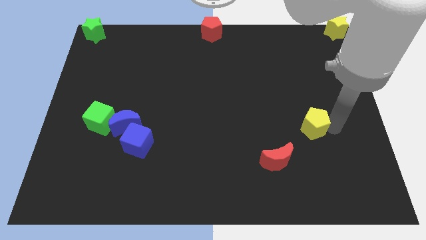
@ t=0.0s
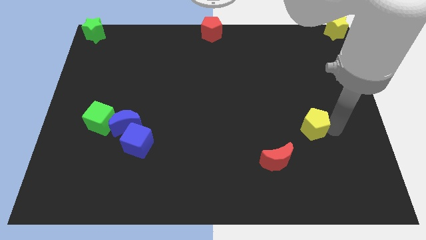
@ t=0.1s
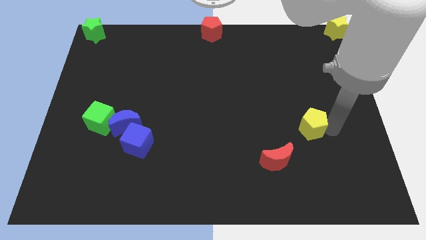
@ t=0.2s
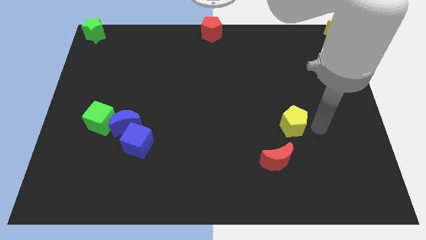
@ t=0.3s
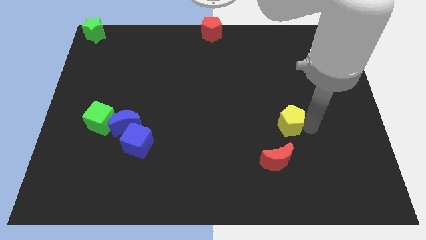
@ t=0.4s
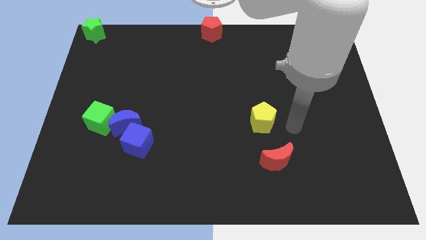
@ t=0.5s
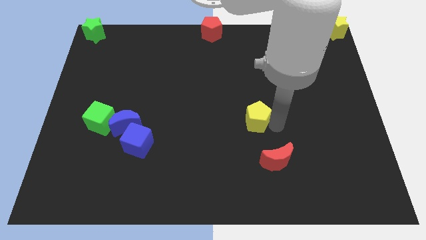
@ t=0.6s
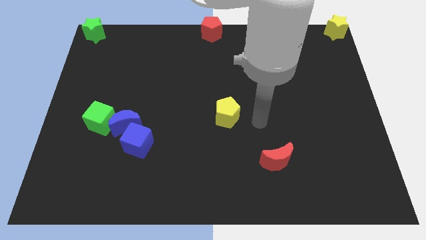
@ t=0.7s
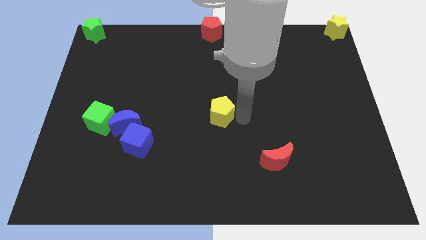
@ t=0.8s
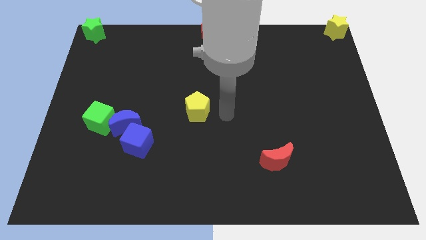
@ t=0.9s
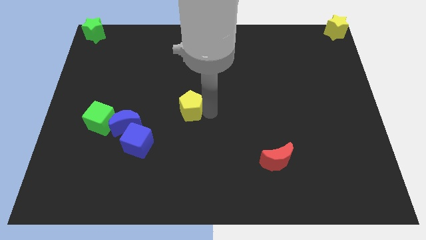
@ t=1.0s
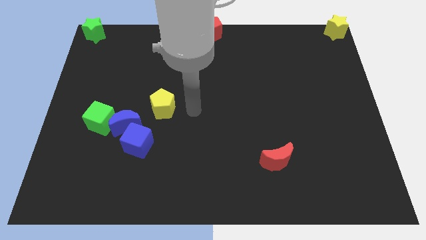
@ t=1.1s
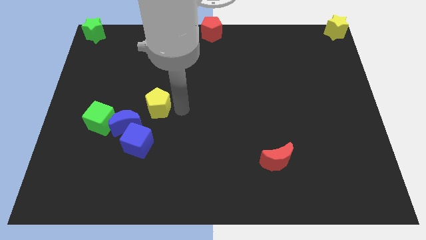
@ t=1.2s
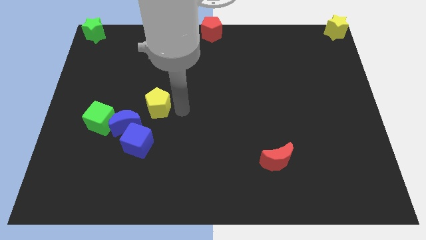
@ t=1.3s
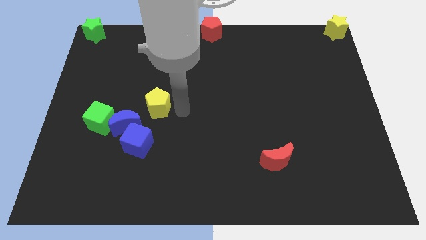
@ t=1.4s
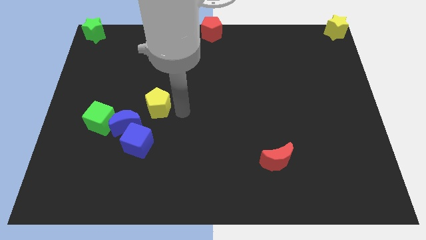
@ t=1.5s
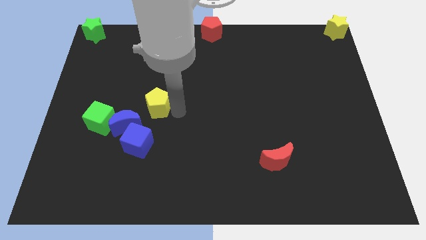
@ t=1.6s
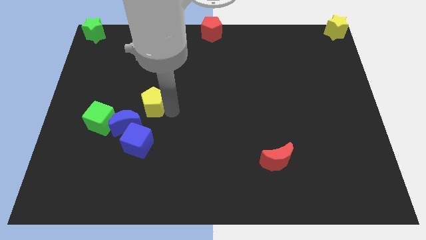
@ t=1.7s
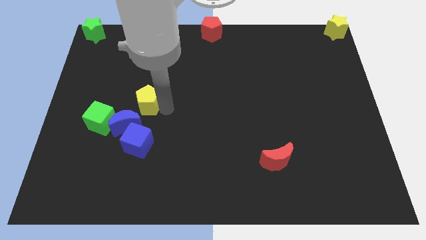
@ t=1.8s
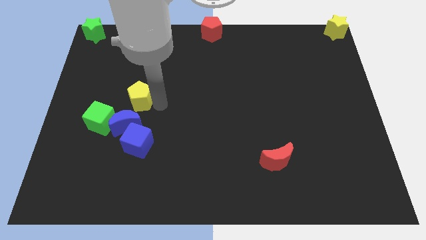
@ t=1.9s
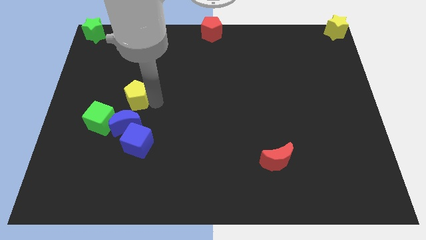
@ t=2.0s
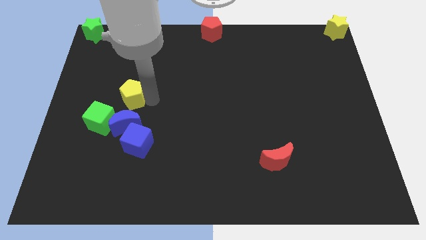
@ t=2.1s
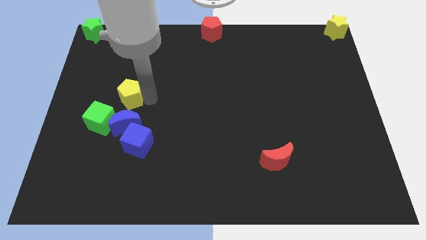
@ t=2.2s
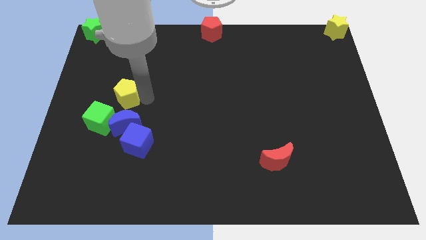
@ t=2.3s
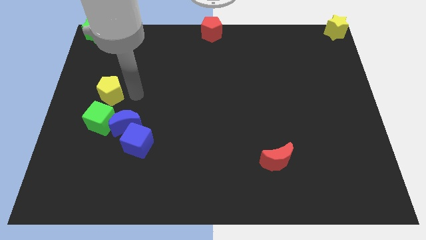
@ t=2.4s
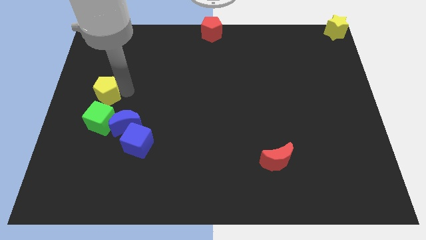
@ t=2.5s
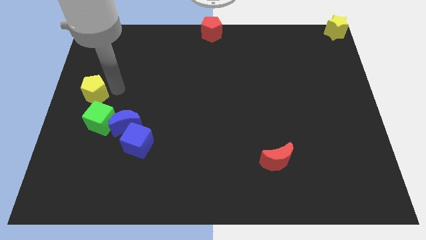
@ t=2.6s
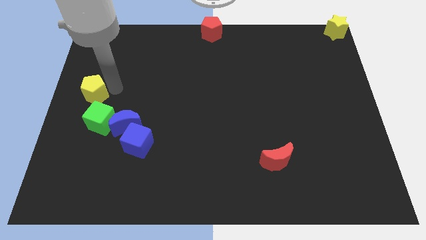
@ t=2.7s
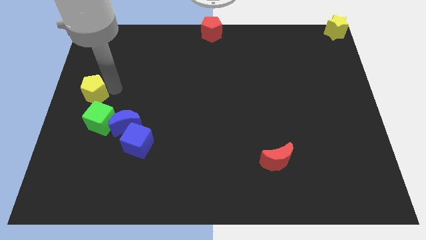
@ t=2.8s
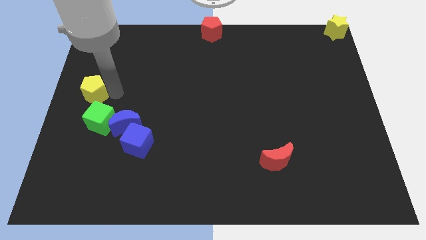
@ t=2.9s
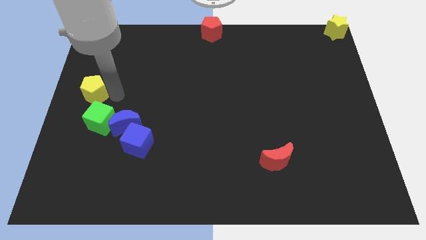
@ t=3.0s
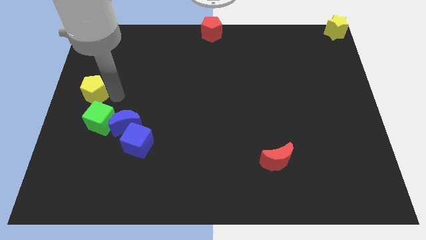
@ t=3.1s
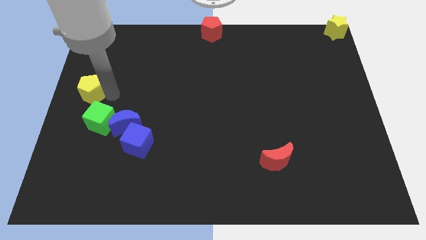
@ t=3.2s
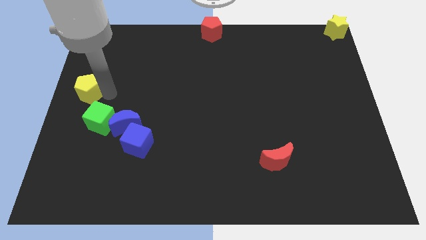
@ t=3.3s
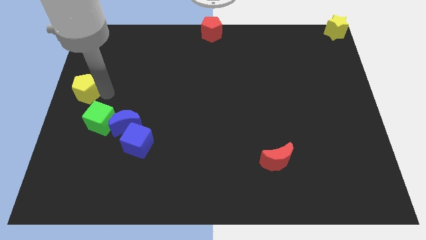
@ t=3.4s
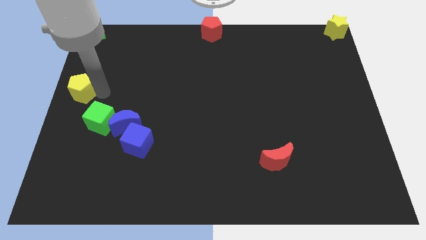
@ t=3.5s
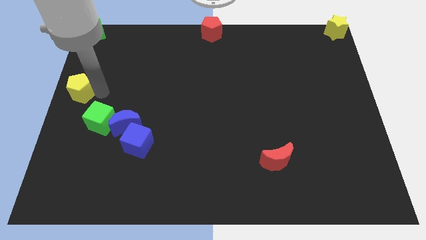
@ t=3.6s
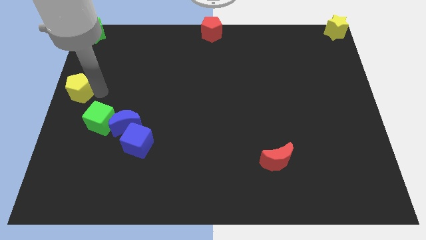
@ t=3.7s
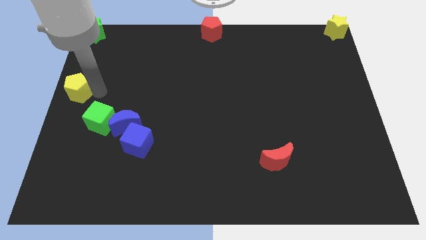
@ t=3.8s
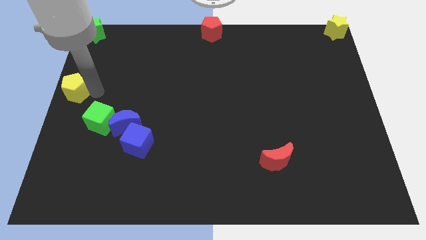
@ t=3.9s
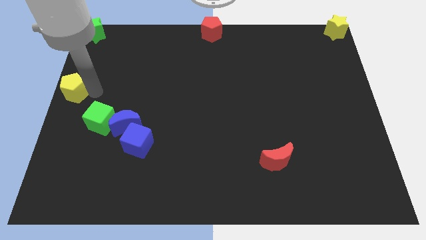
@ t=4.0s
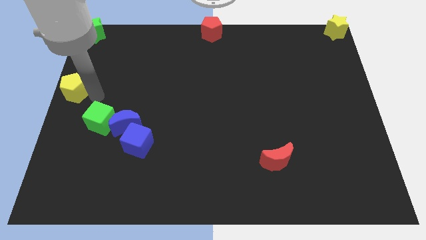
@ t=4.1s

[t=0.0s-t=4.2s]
push the yellow pentagon to the center left

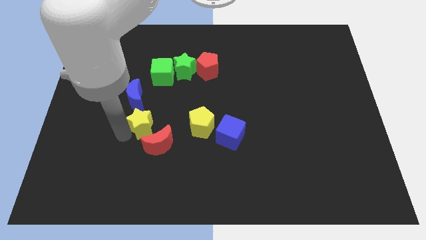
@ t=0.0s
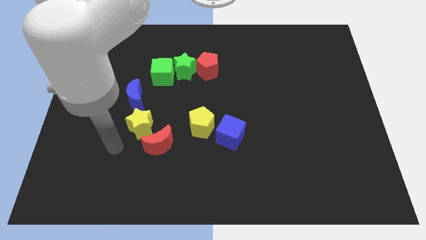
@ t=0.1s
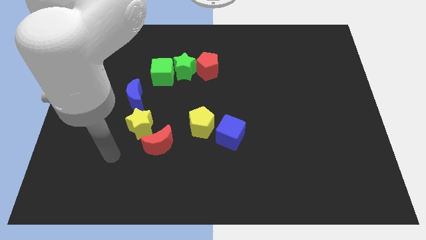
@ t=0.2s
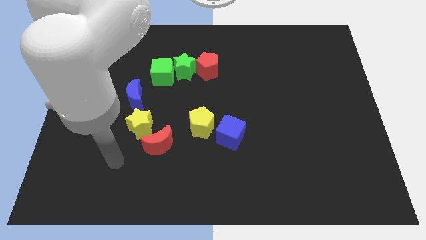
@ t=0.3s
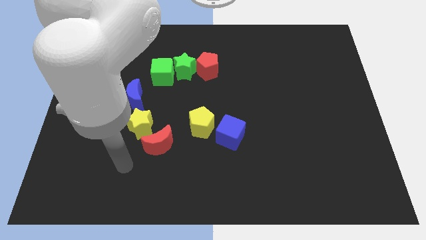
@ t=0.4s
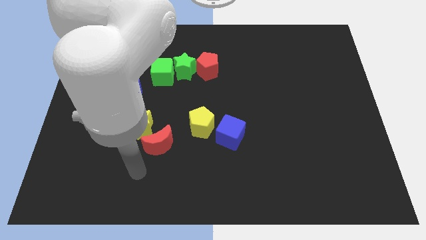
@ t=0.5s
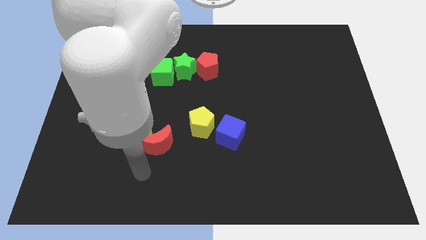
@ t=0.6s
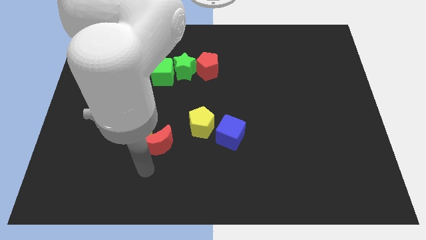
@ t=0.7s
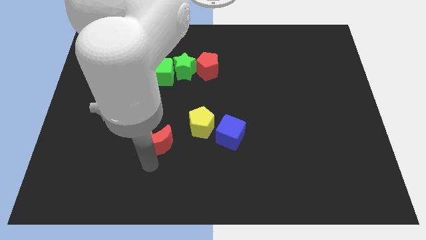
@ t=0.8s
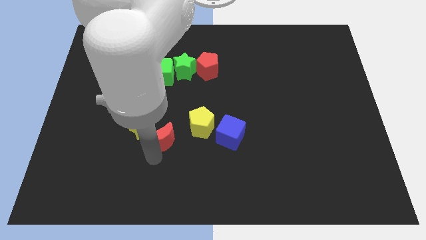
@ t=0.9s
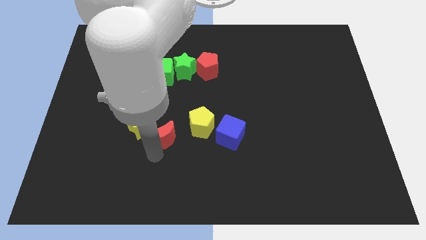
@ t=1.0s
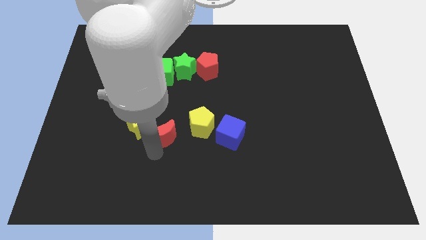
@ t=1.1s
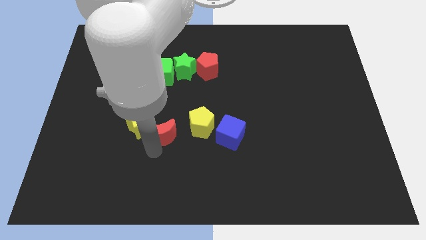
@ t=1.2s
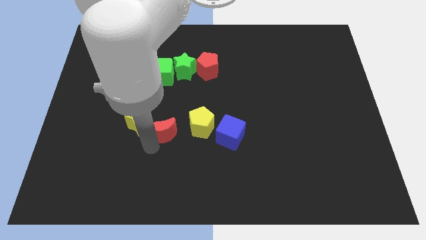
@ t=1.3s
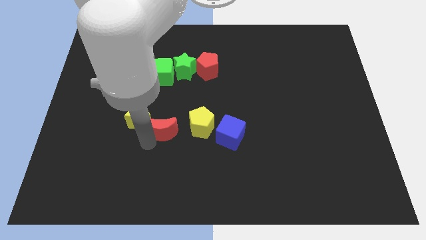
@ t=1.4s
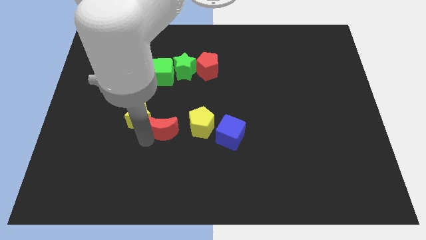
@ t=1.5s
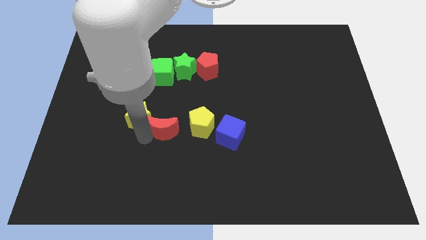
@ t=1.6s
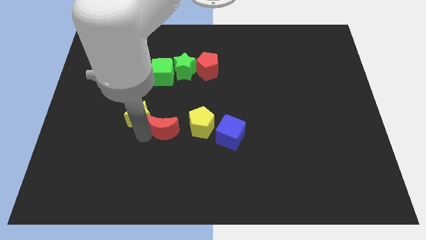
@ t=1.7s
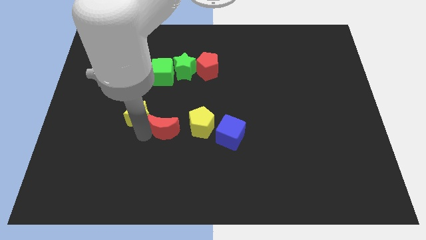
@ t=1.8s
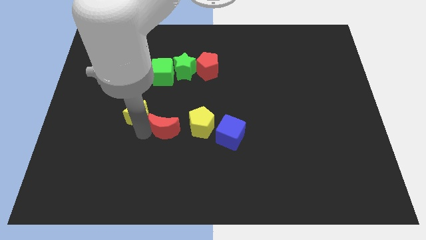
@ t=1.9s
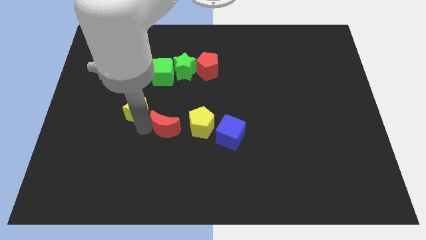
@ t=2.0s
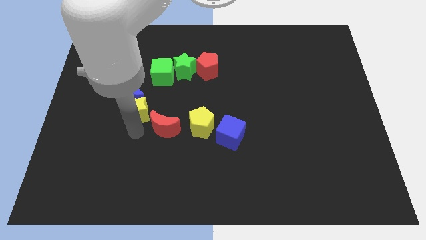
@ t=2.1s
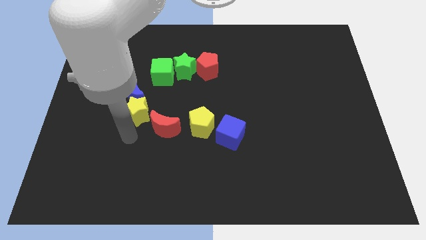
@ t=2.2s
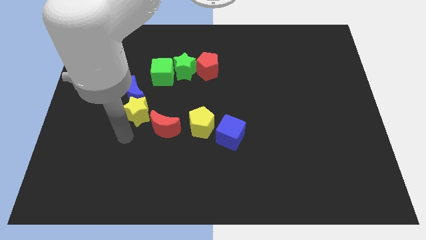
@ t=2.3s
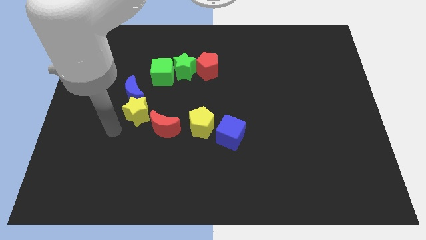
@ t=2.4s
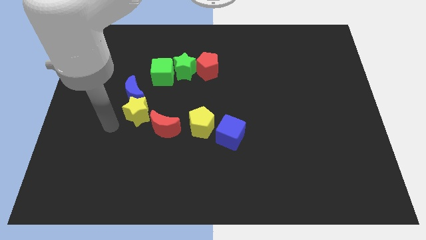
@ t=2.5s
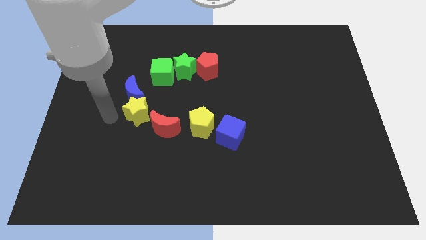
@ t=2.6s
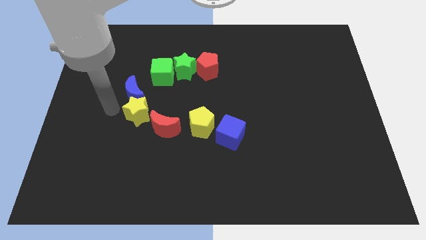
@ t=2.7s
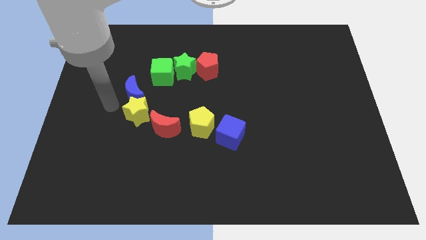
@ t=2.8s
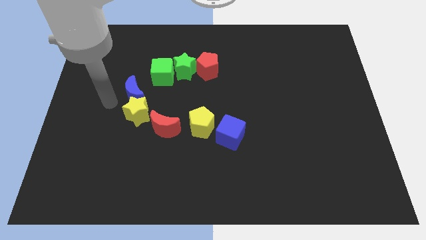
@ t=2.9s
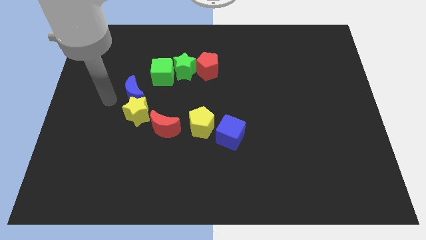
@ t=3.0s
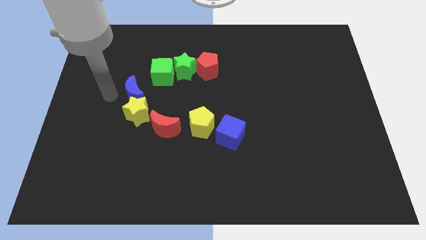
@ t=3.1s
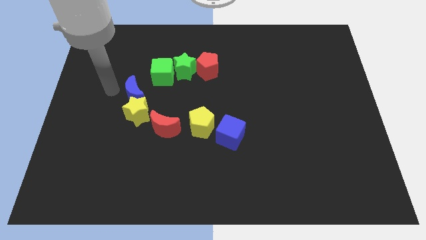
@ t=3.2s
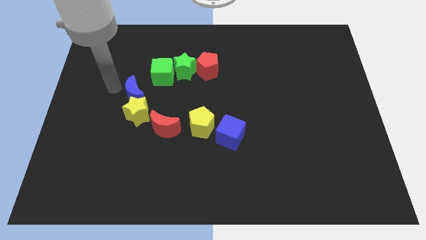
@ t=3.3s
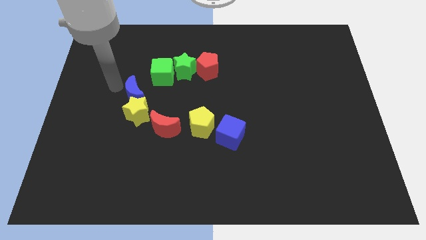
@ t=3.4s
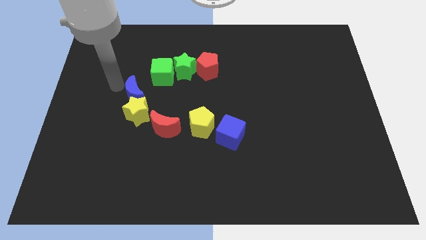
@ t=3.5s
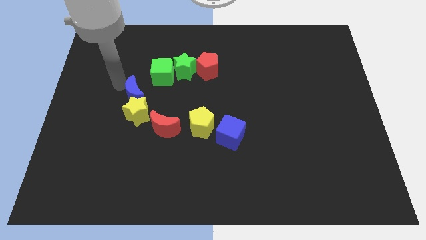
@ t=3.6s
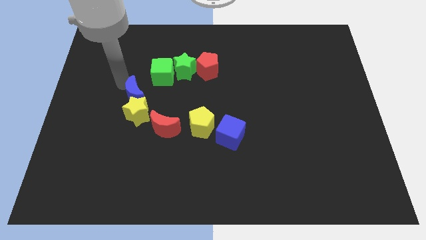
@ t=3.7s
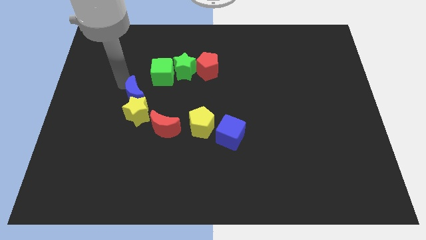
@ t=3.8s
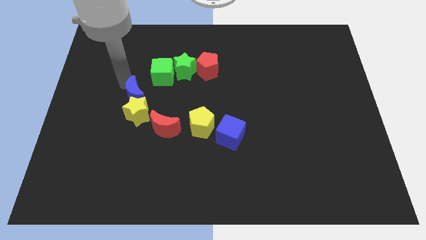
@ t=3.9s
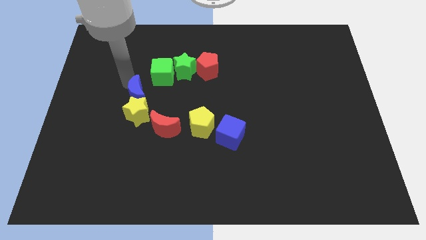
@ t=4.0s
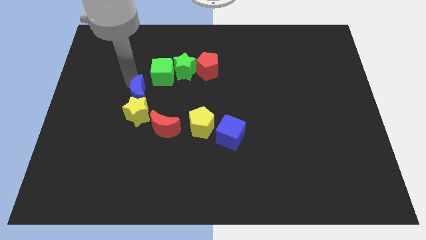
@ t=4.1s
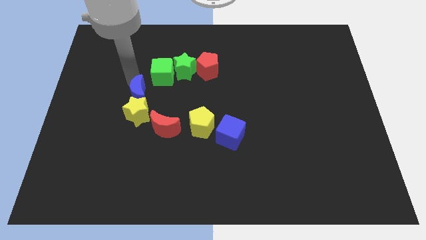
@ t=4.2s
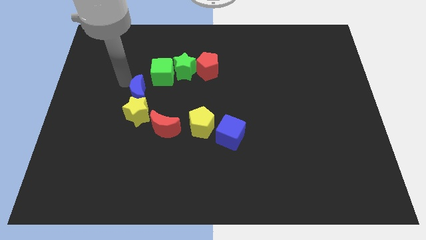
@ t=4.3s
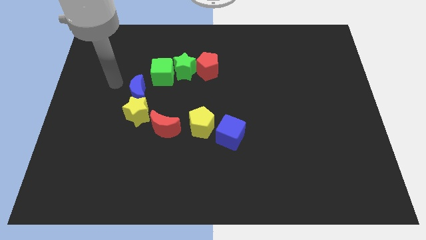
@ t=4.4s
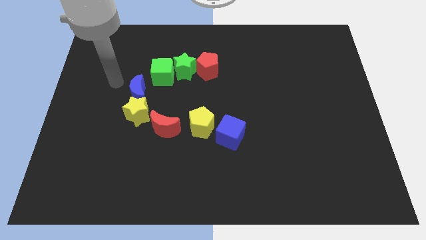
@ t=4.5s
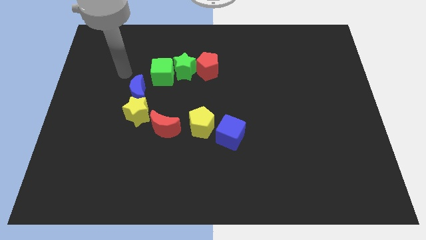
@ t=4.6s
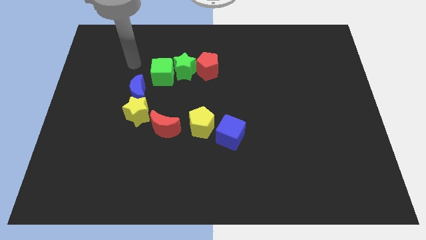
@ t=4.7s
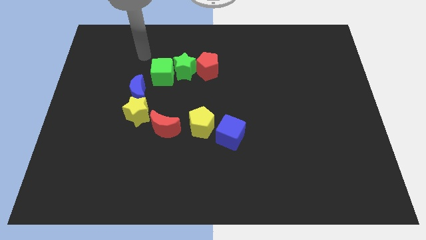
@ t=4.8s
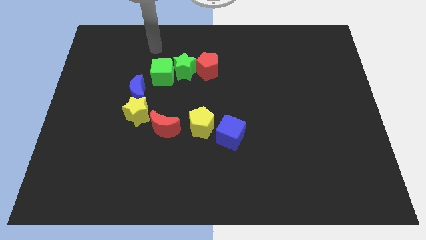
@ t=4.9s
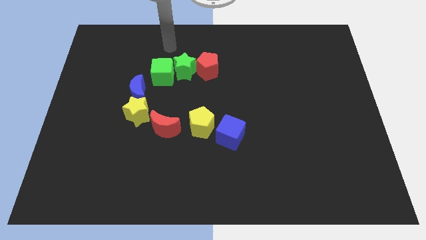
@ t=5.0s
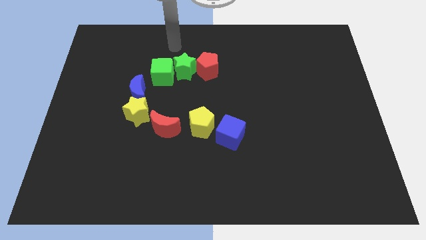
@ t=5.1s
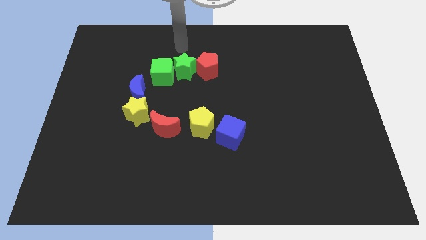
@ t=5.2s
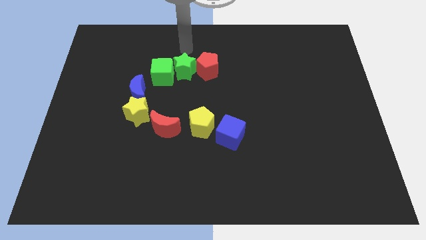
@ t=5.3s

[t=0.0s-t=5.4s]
tap the red and blue crescents slightly towards the center of the board
